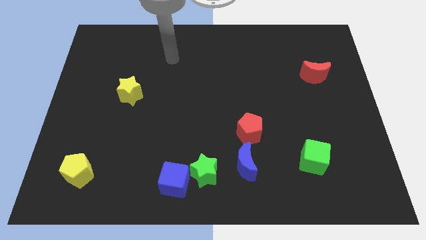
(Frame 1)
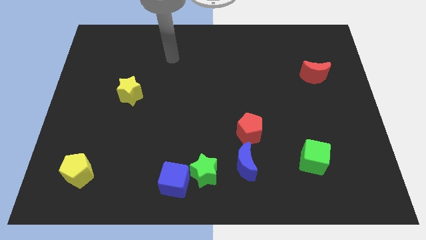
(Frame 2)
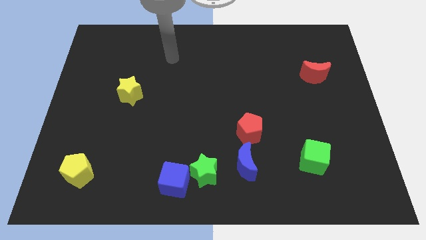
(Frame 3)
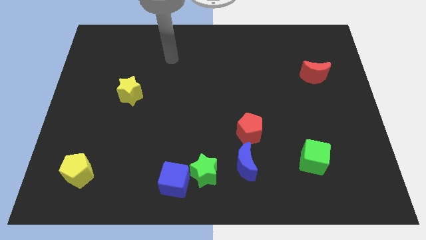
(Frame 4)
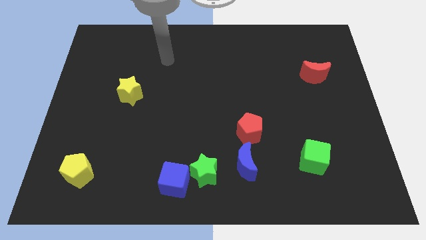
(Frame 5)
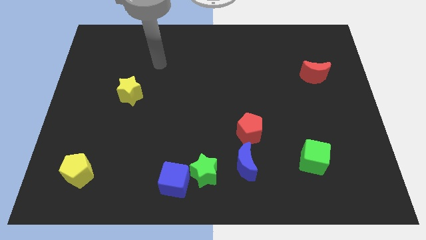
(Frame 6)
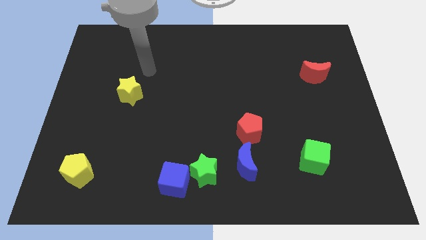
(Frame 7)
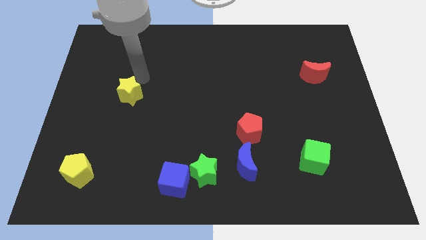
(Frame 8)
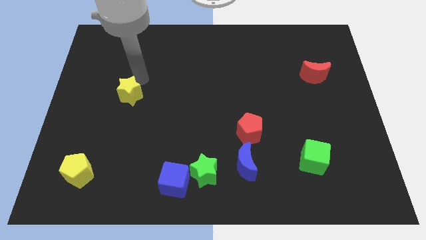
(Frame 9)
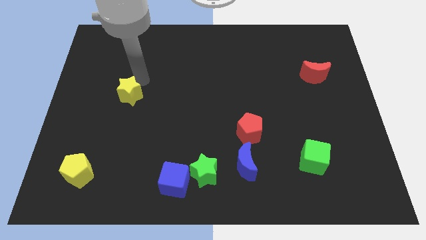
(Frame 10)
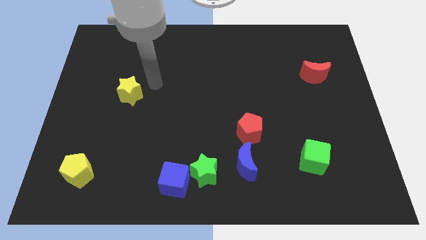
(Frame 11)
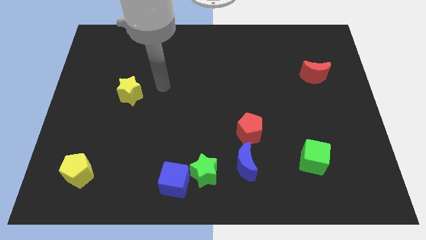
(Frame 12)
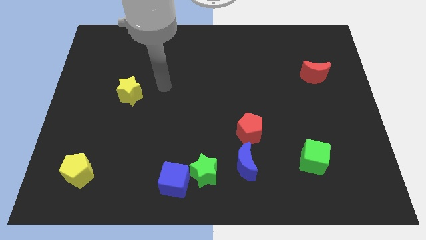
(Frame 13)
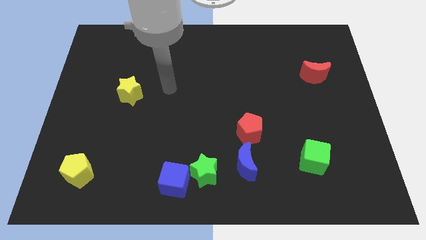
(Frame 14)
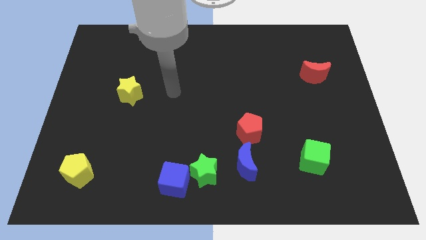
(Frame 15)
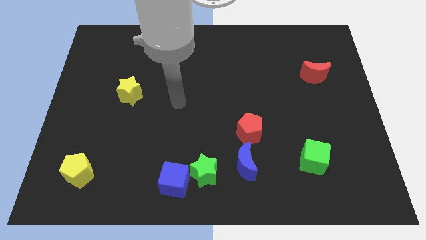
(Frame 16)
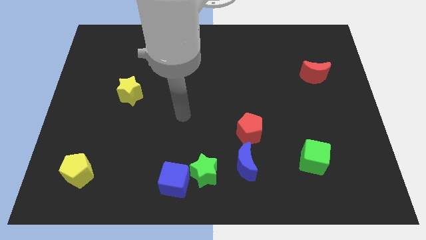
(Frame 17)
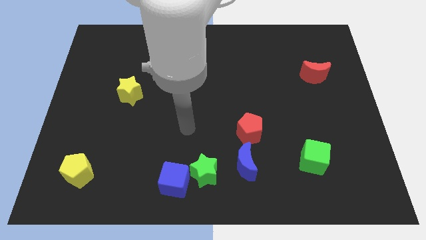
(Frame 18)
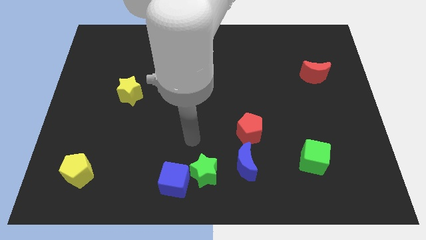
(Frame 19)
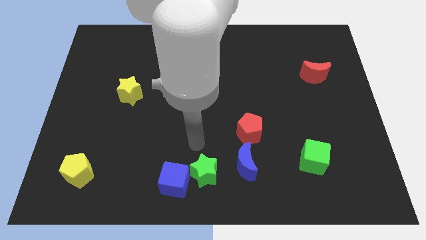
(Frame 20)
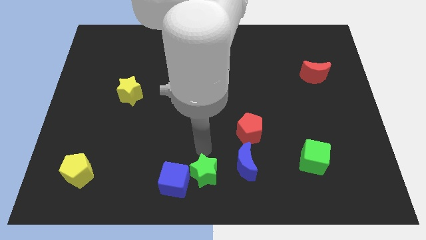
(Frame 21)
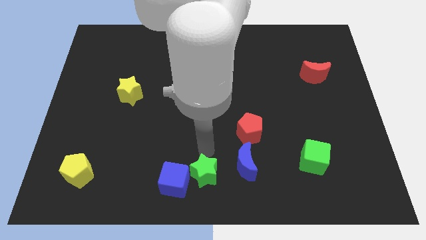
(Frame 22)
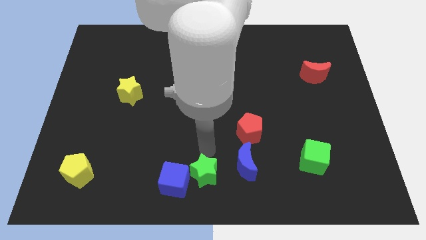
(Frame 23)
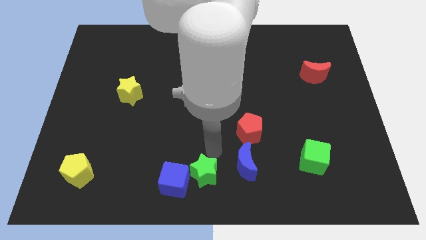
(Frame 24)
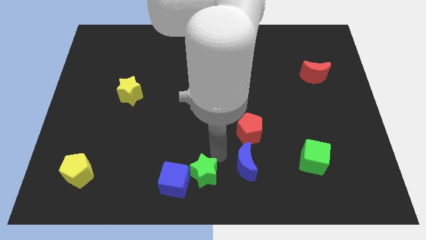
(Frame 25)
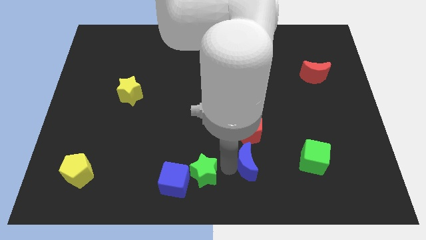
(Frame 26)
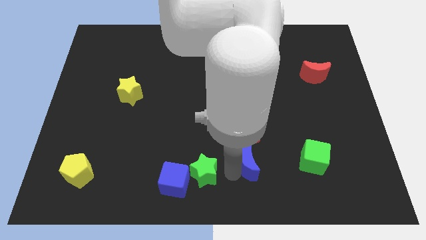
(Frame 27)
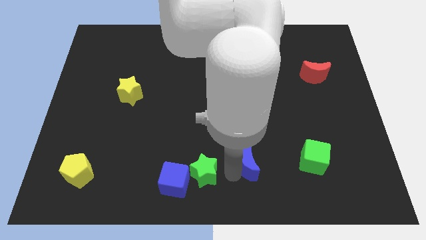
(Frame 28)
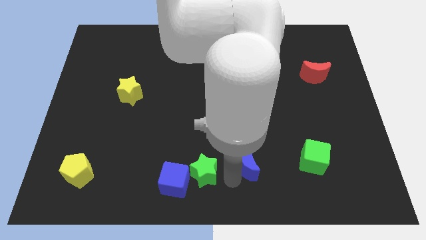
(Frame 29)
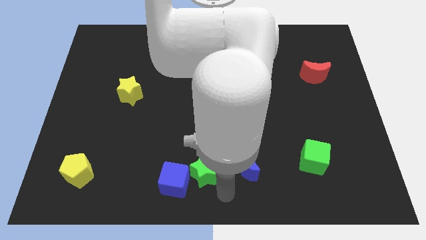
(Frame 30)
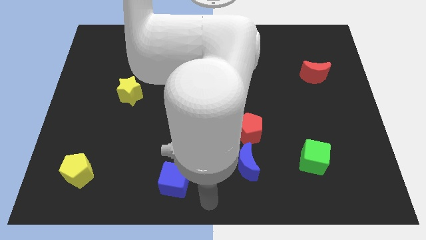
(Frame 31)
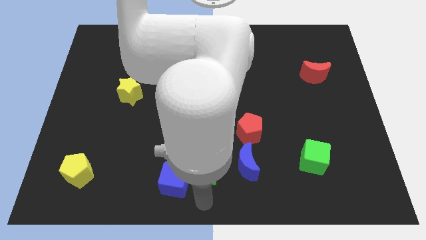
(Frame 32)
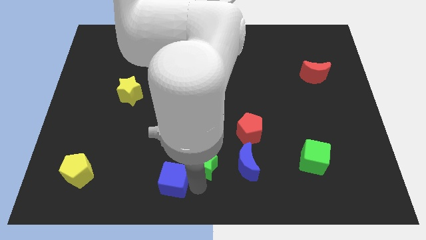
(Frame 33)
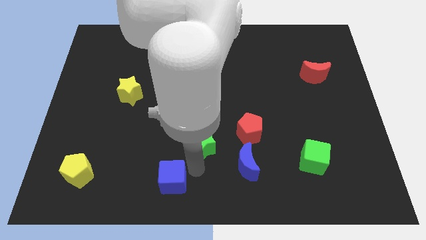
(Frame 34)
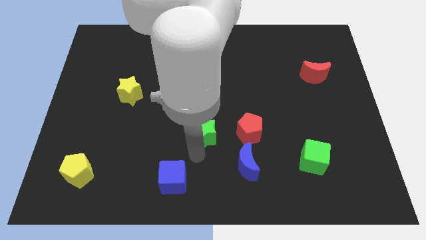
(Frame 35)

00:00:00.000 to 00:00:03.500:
move the green star towards the left of the red pentagon

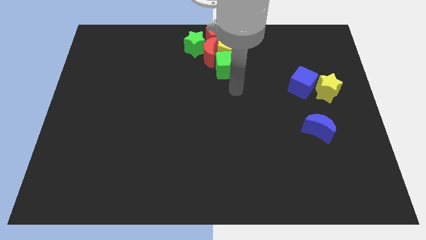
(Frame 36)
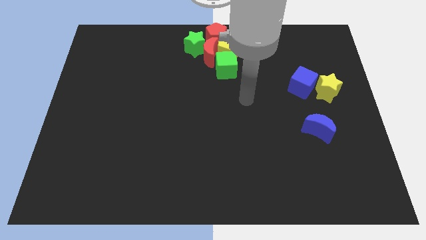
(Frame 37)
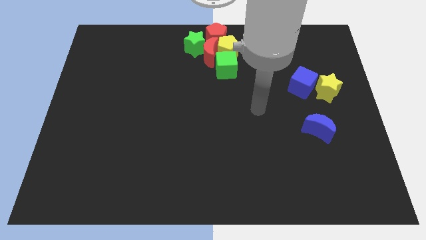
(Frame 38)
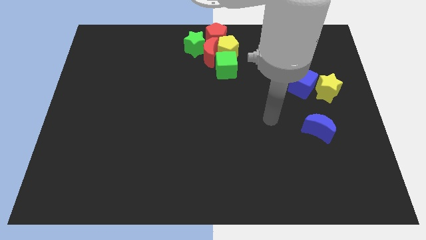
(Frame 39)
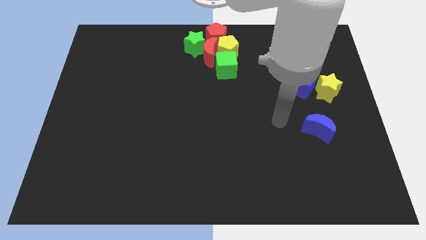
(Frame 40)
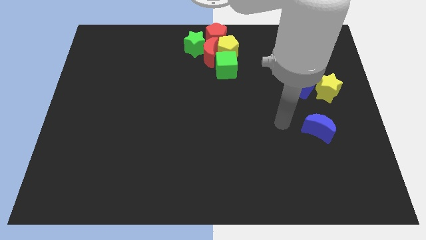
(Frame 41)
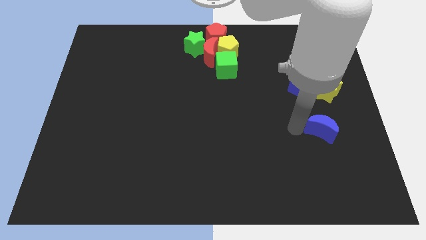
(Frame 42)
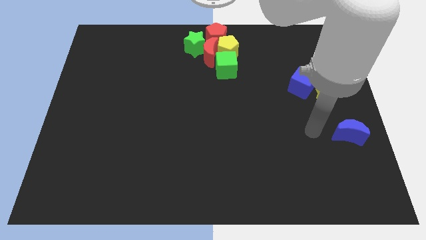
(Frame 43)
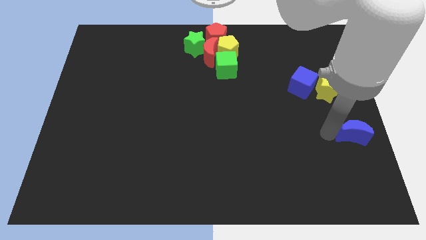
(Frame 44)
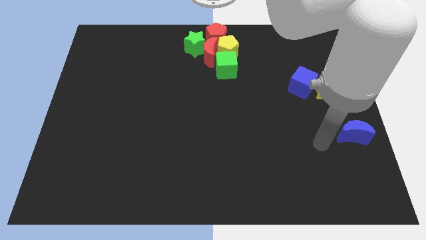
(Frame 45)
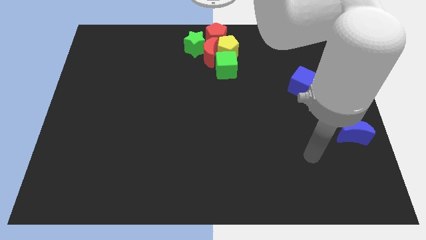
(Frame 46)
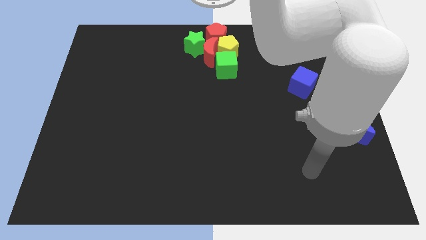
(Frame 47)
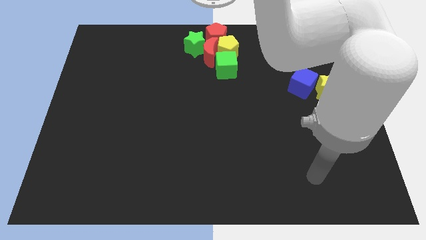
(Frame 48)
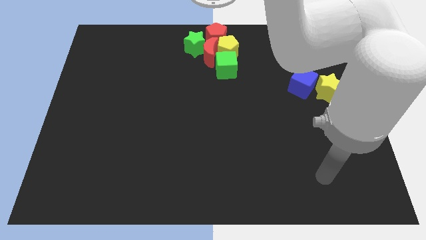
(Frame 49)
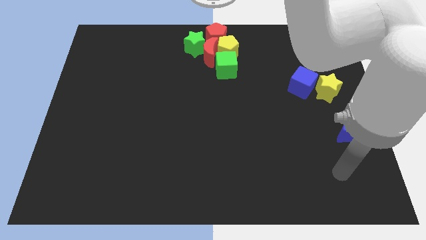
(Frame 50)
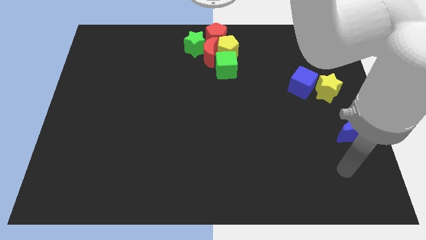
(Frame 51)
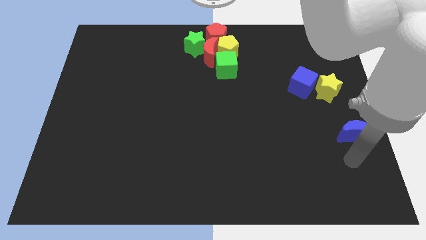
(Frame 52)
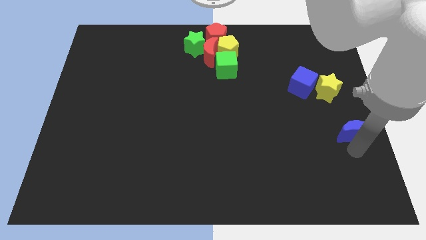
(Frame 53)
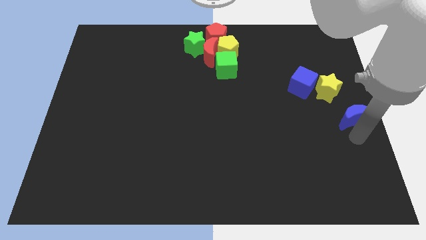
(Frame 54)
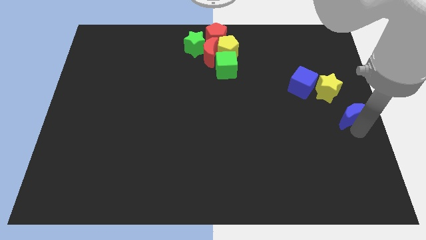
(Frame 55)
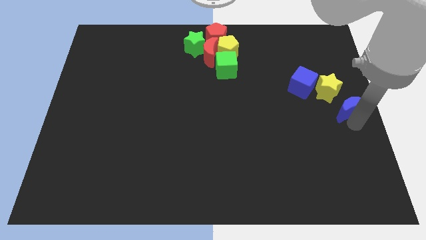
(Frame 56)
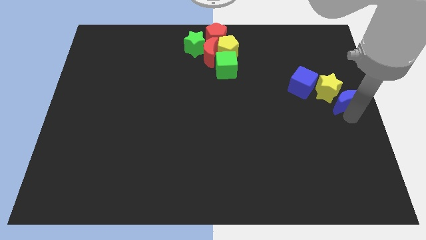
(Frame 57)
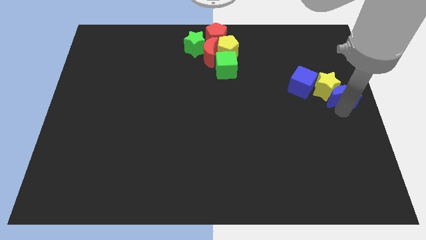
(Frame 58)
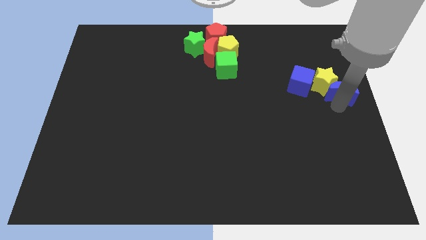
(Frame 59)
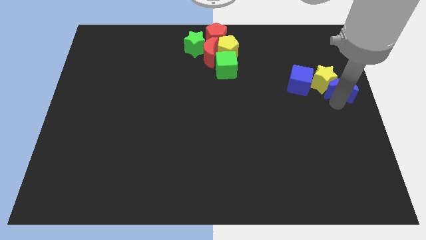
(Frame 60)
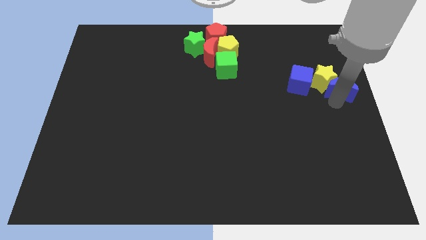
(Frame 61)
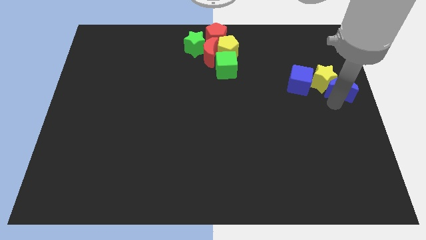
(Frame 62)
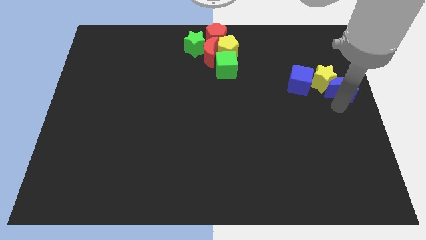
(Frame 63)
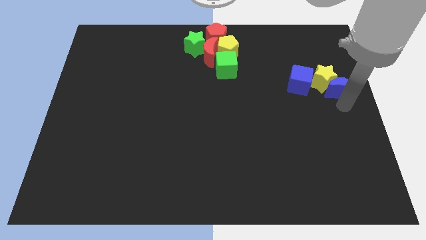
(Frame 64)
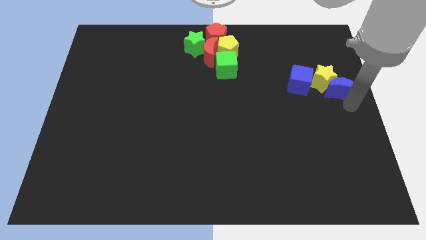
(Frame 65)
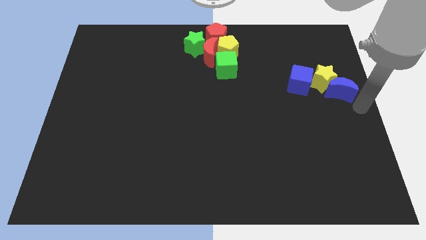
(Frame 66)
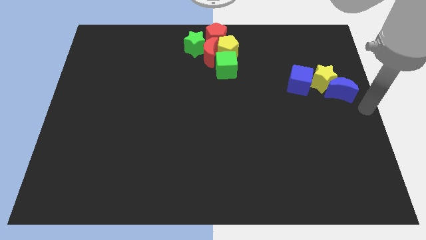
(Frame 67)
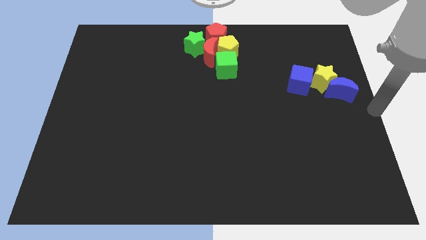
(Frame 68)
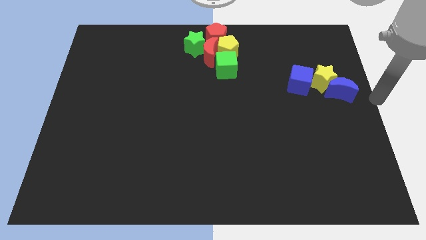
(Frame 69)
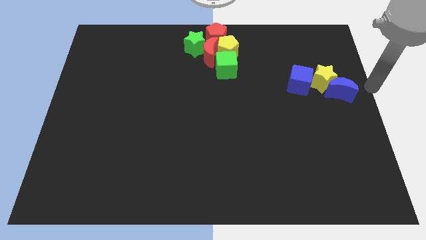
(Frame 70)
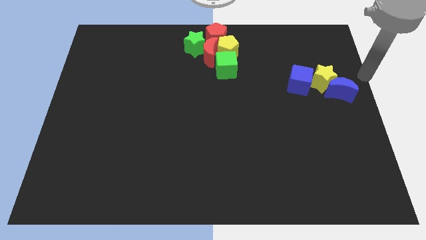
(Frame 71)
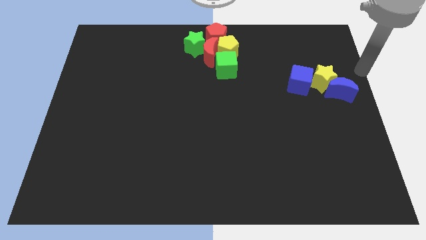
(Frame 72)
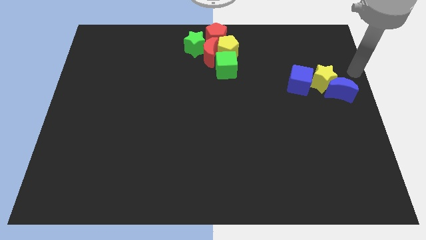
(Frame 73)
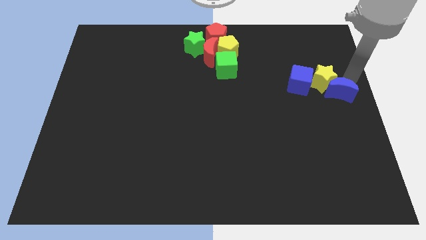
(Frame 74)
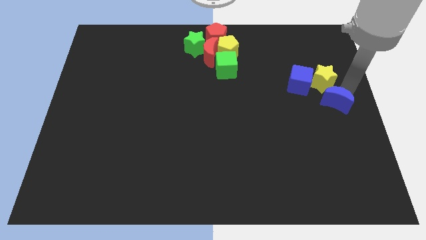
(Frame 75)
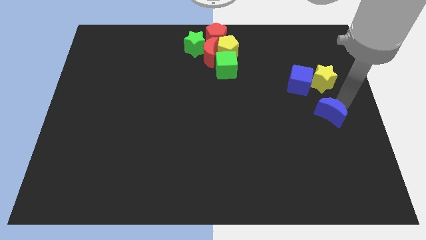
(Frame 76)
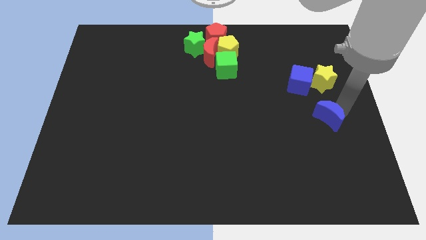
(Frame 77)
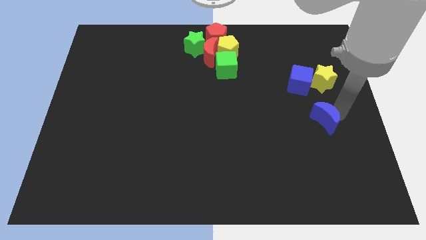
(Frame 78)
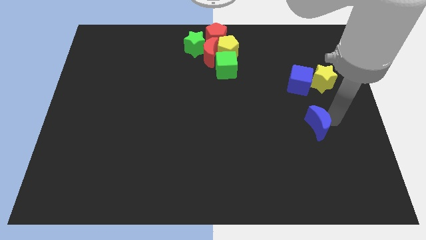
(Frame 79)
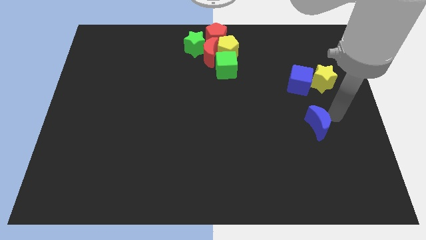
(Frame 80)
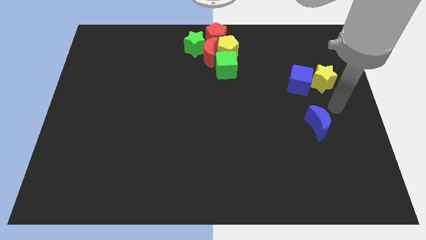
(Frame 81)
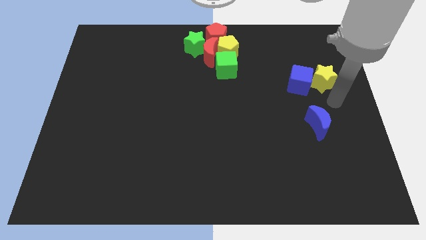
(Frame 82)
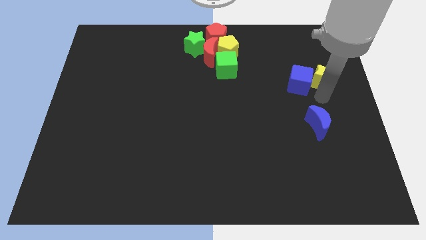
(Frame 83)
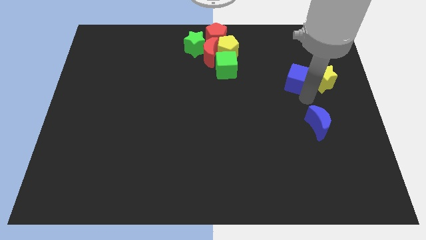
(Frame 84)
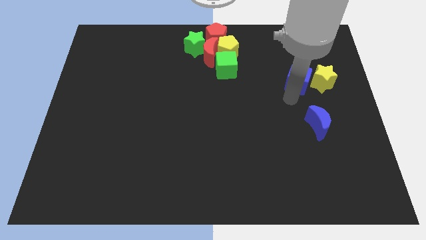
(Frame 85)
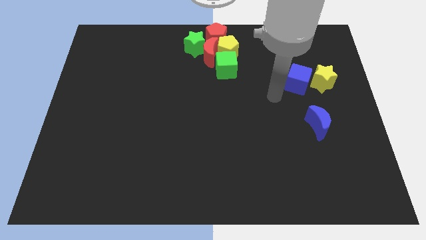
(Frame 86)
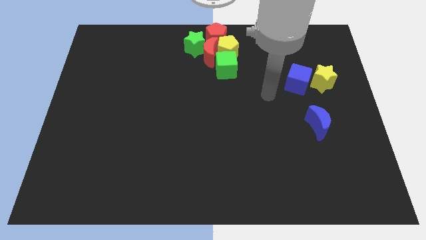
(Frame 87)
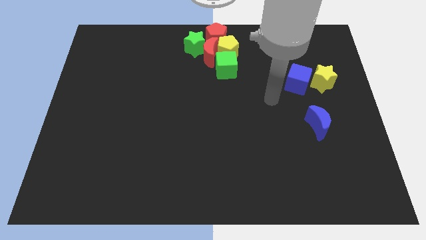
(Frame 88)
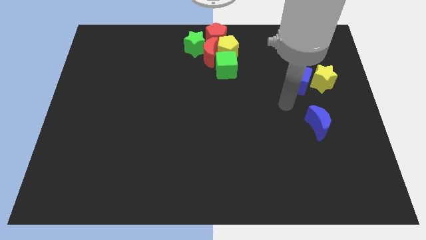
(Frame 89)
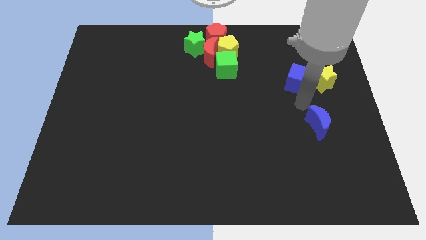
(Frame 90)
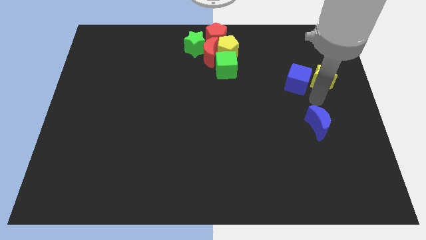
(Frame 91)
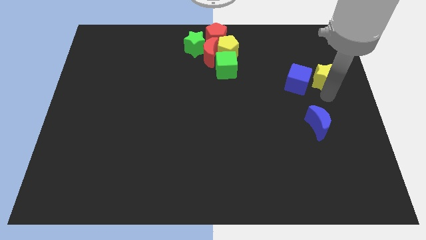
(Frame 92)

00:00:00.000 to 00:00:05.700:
push the blue crescent to the bottom of the blue cube
